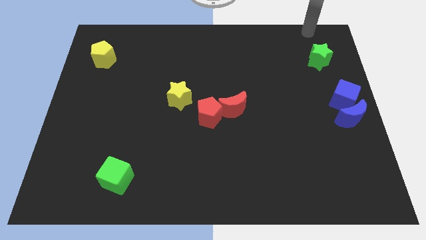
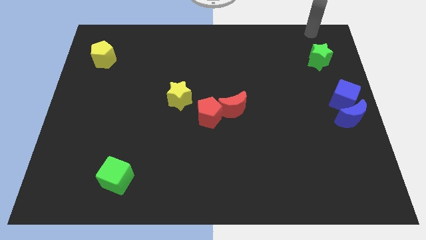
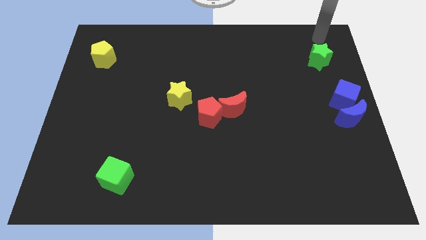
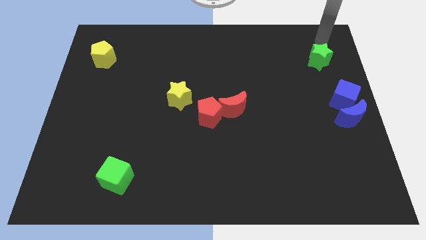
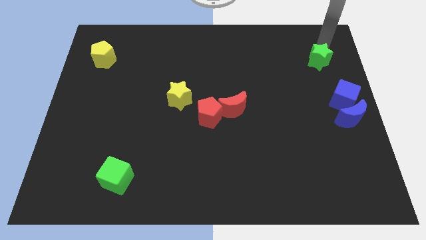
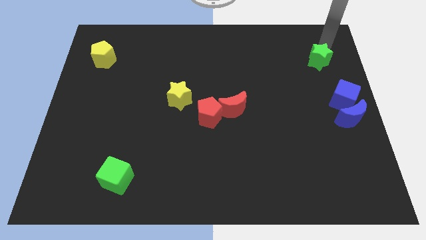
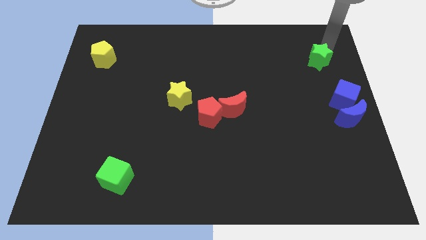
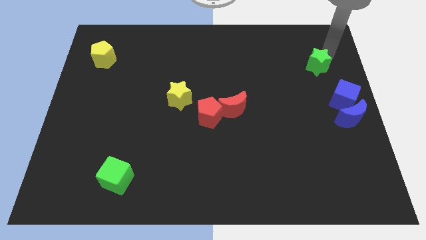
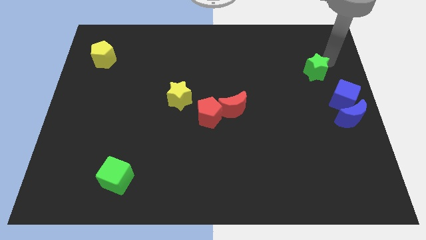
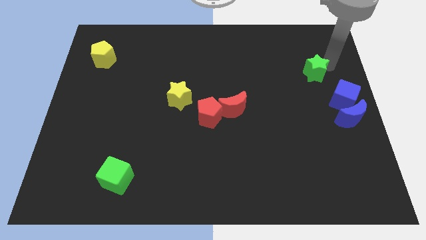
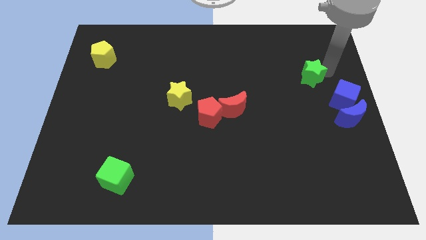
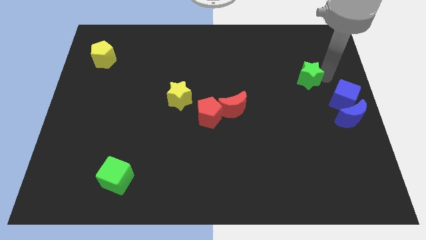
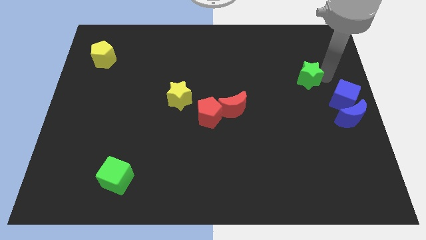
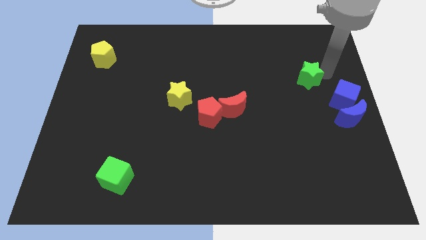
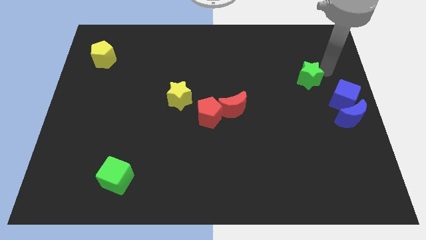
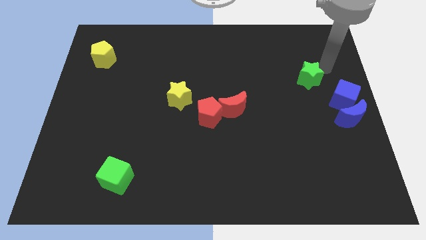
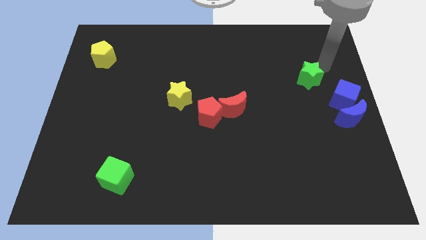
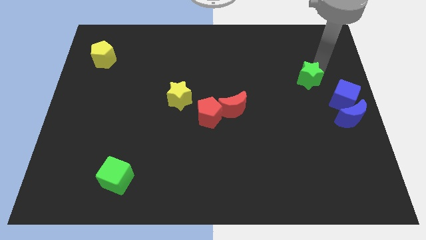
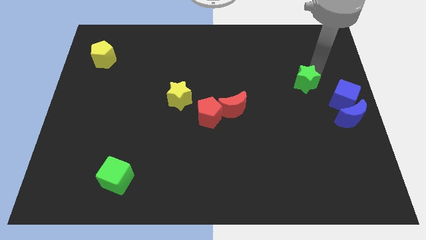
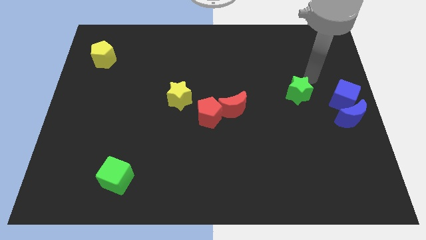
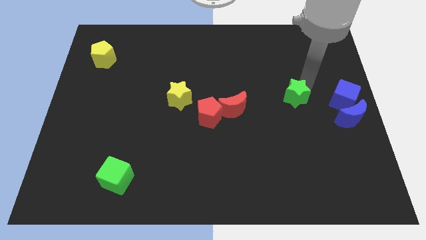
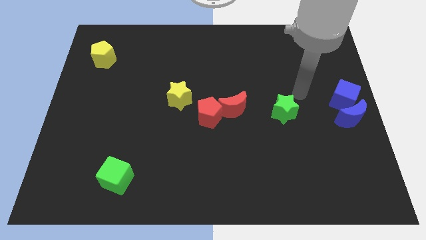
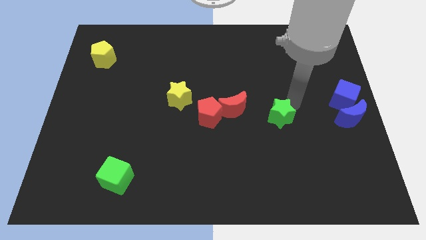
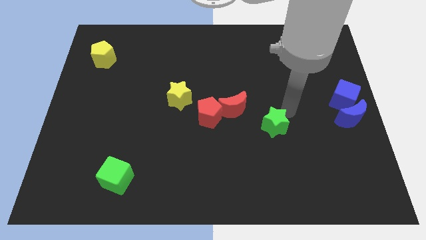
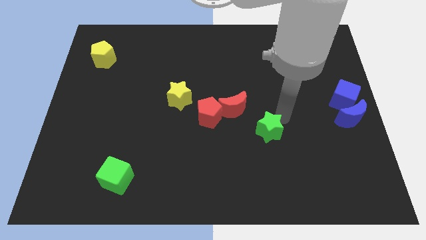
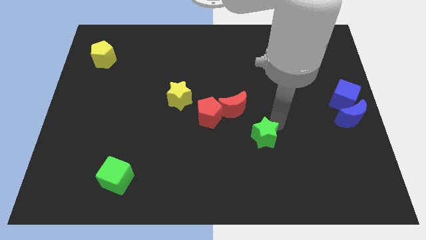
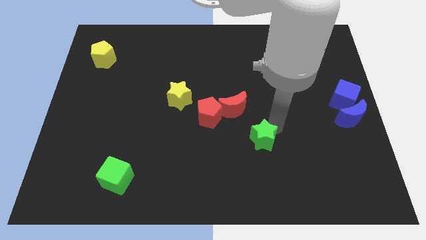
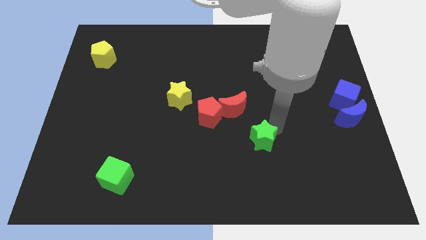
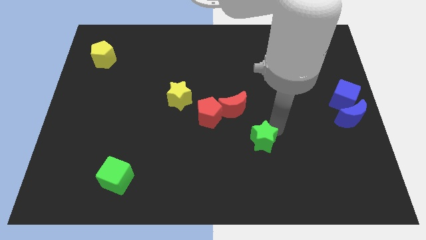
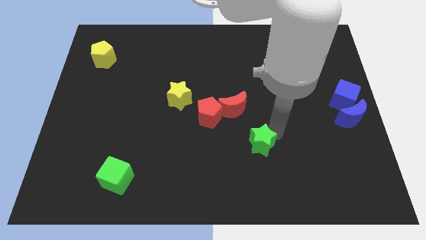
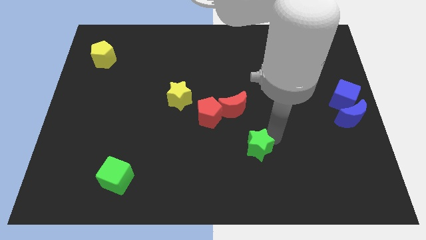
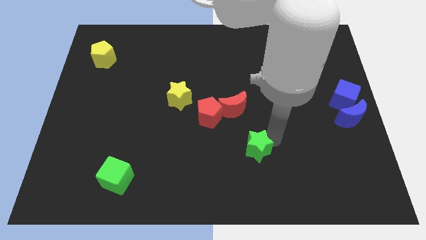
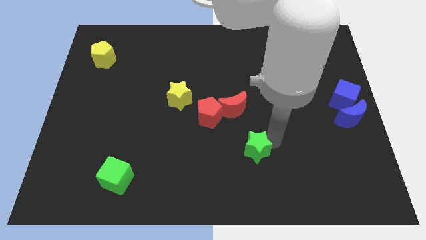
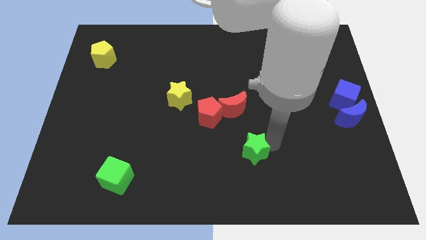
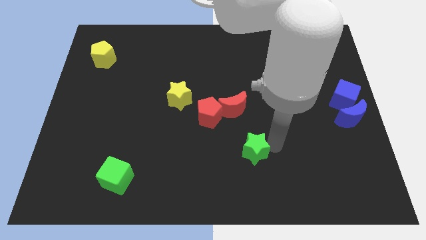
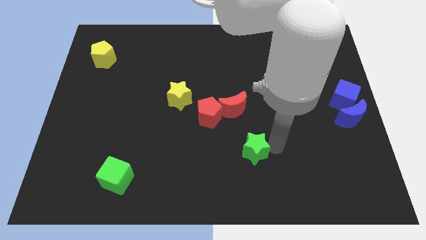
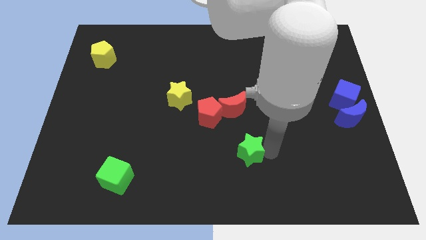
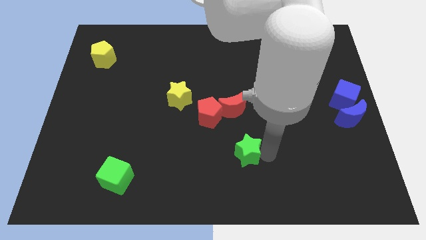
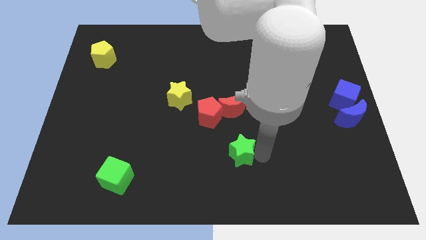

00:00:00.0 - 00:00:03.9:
place the green star below the red crescent

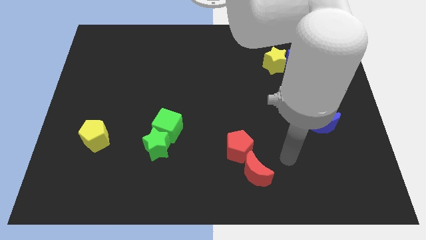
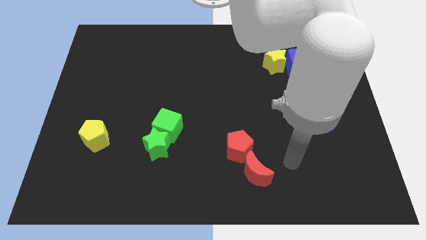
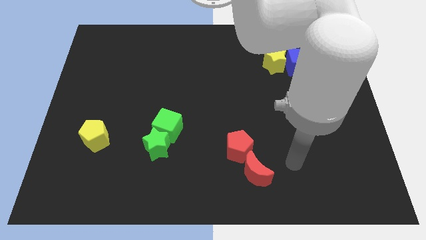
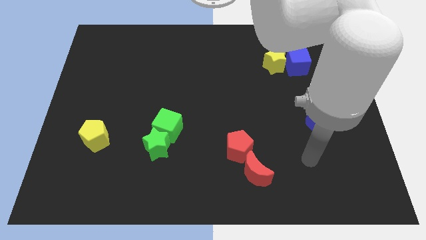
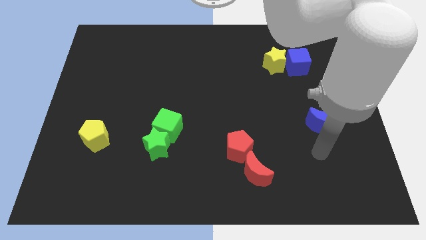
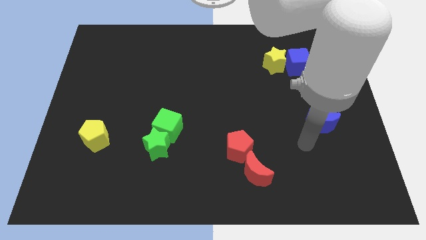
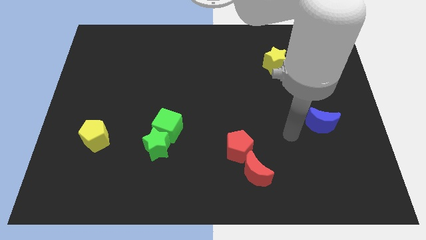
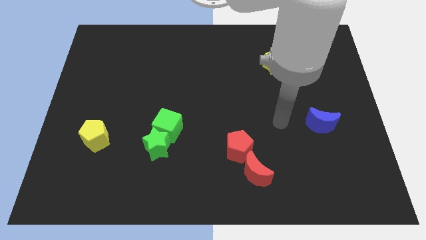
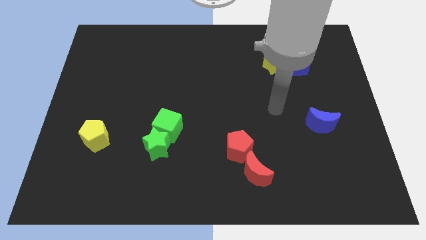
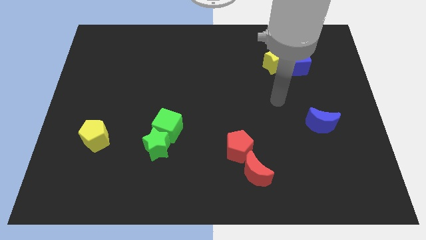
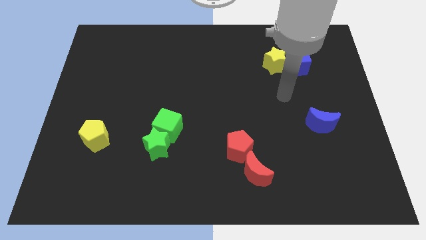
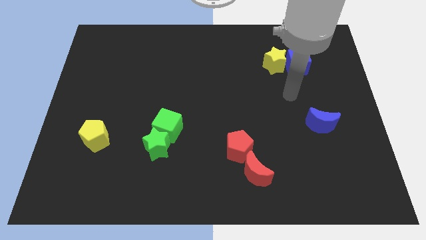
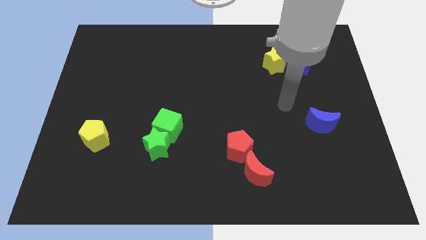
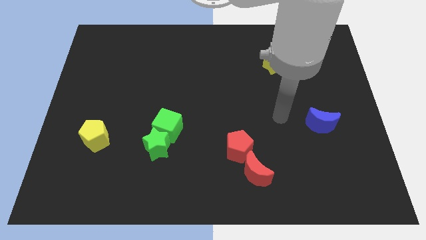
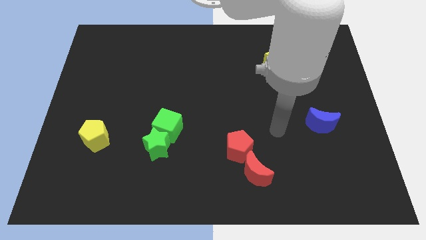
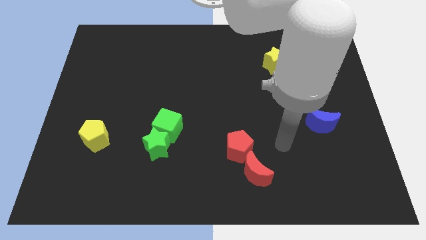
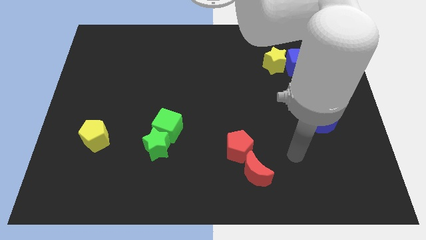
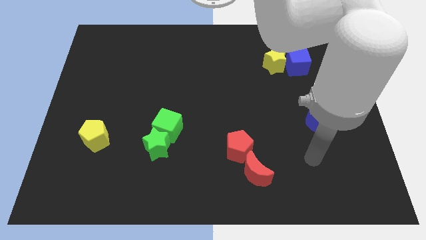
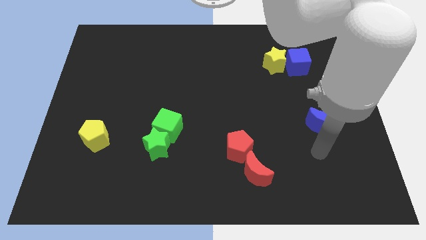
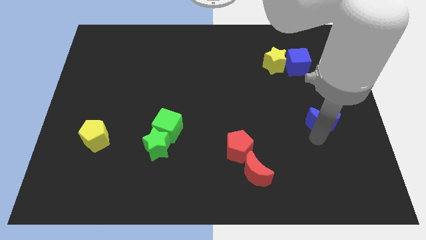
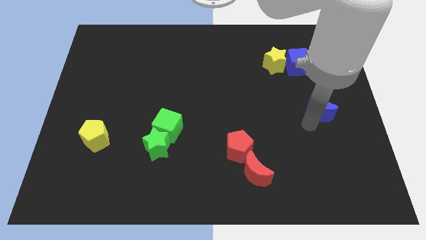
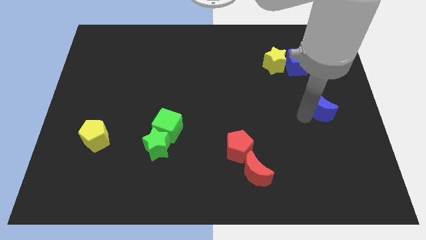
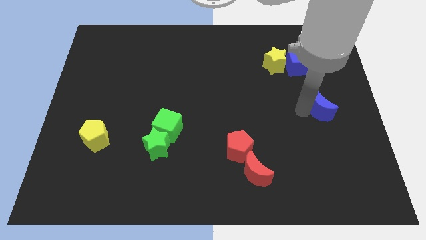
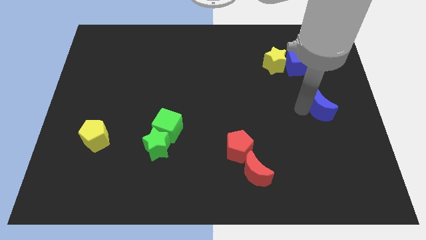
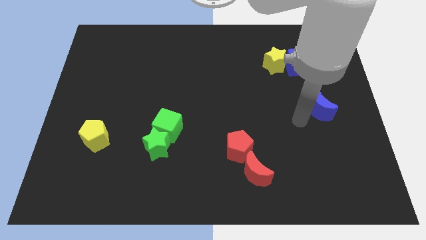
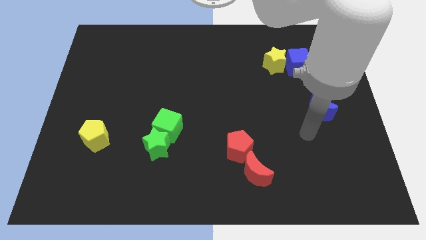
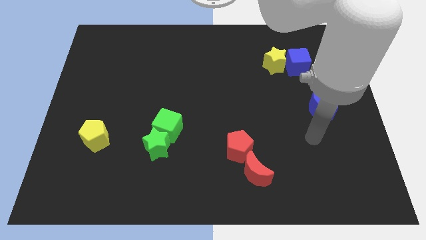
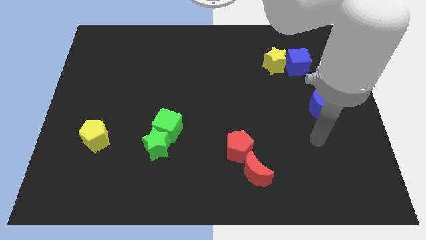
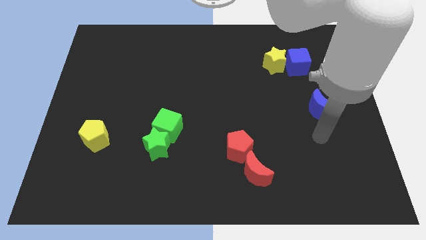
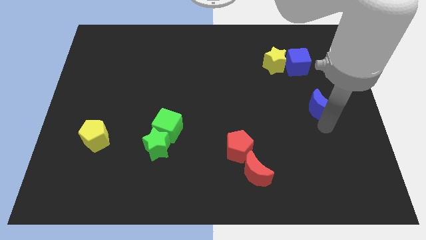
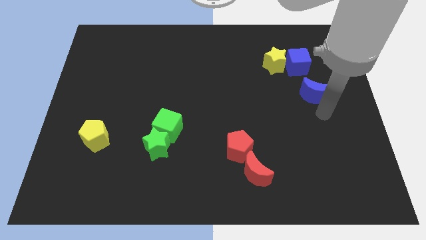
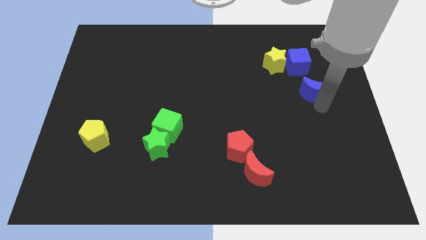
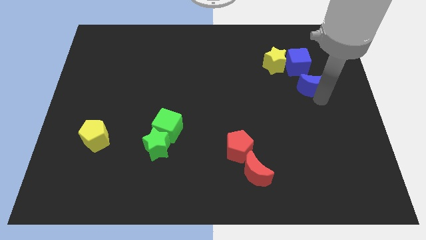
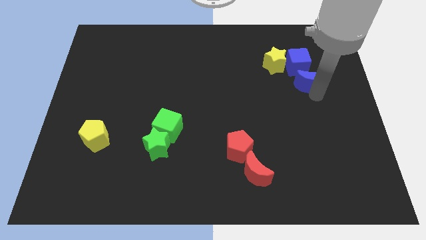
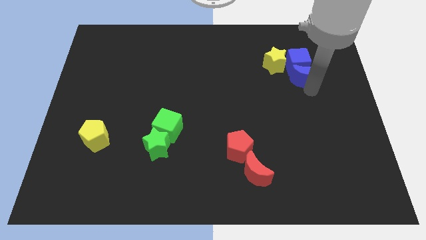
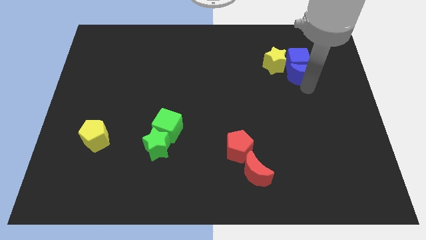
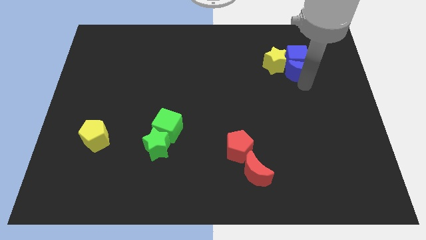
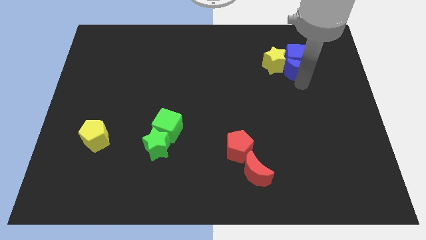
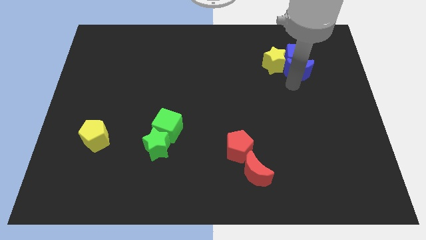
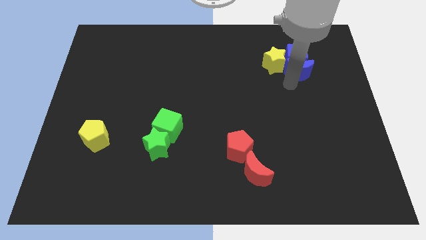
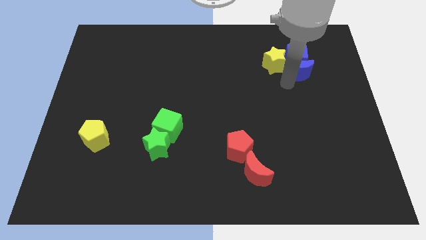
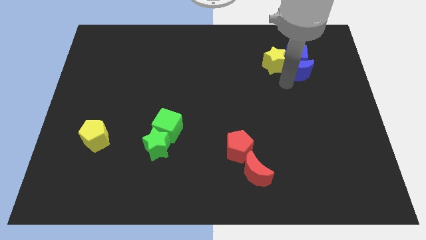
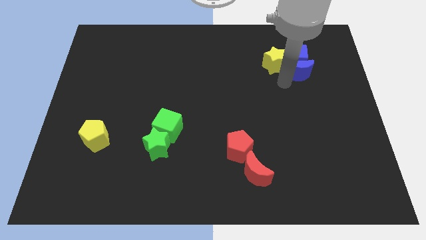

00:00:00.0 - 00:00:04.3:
move the blue crescent below the blue cube

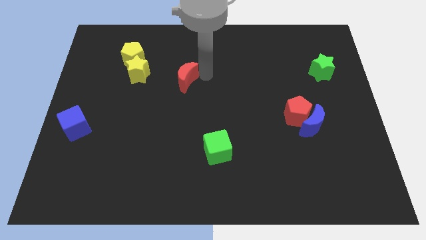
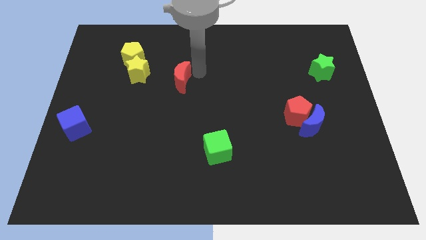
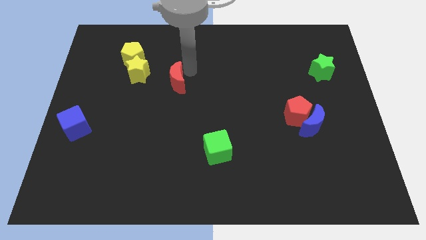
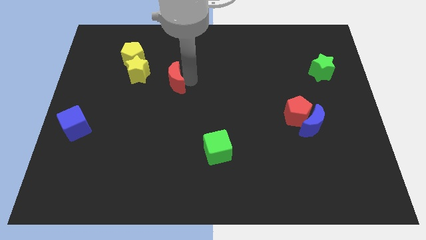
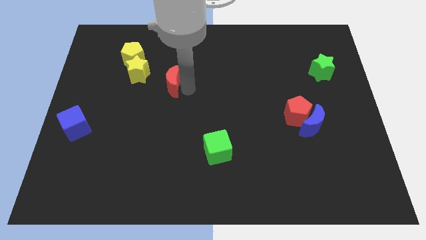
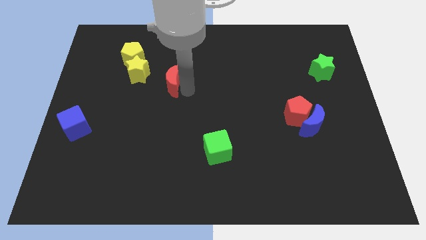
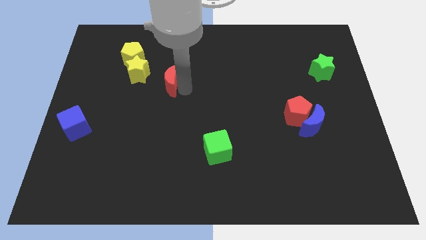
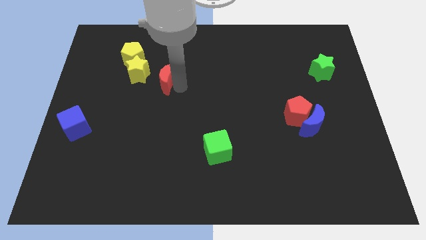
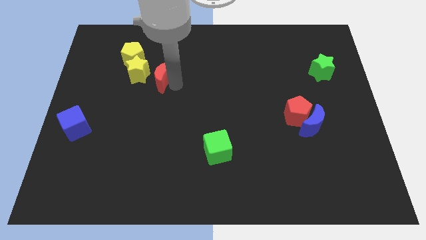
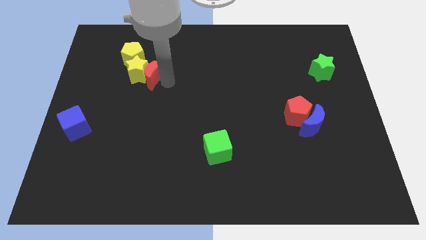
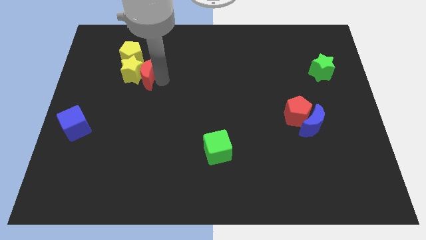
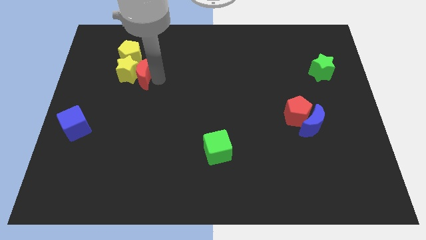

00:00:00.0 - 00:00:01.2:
push the red moon into the yellow star
